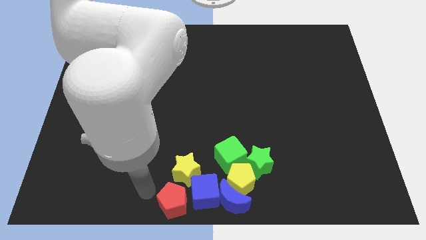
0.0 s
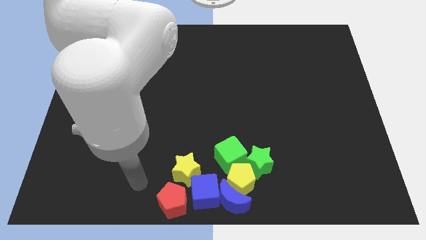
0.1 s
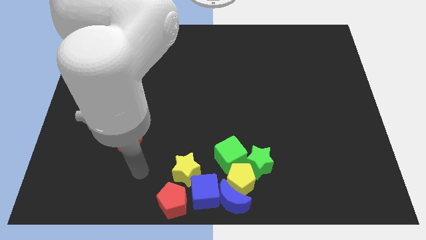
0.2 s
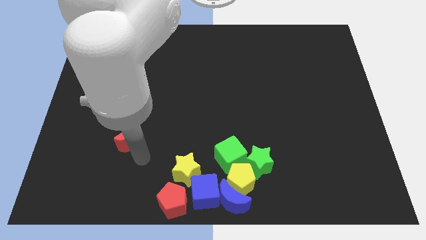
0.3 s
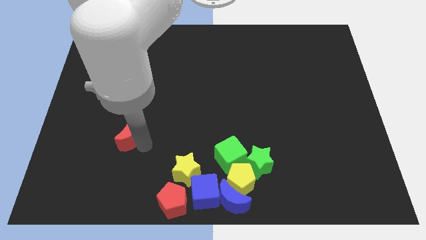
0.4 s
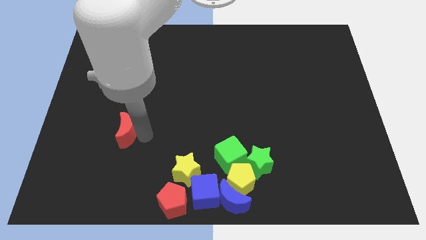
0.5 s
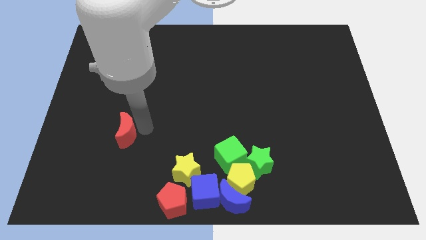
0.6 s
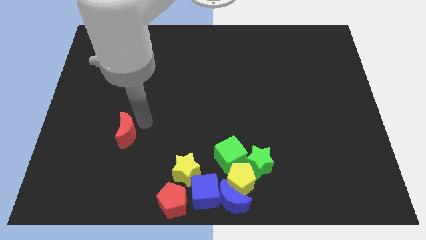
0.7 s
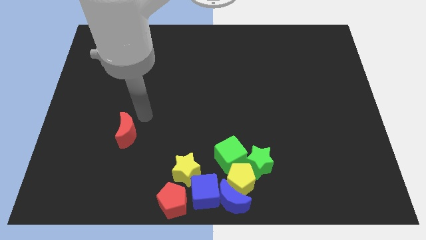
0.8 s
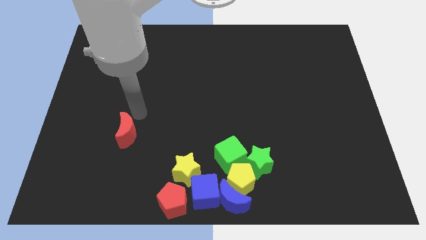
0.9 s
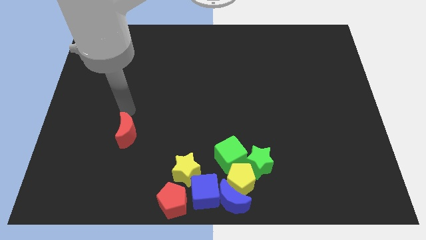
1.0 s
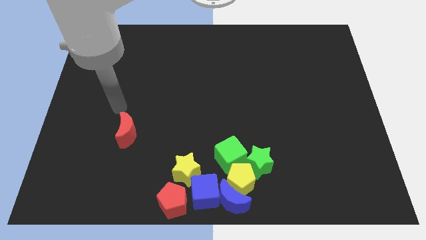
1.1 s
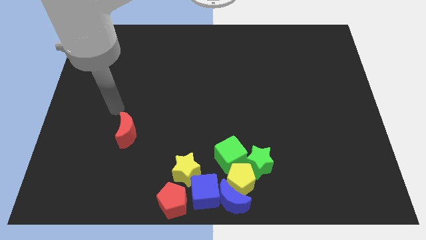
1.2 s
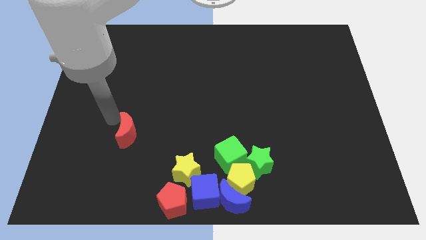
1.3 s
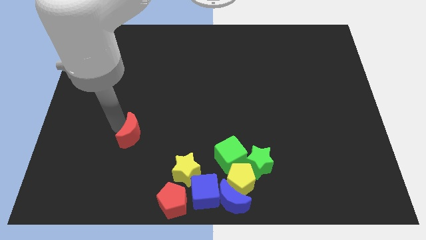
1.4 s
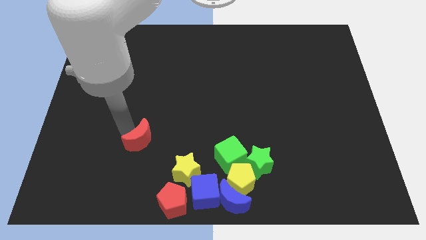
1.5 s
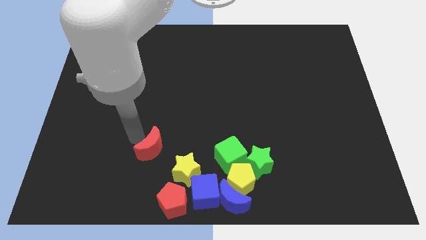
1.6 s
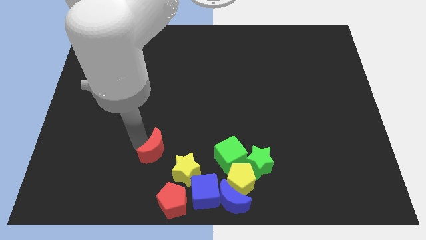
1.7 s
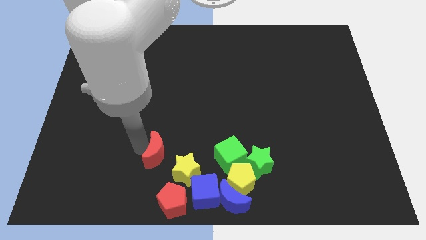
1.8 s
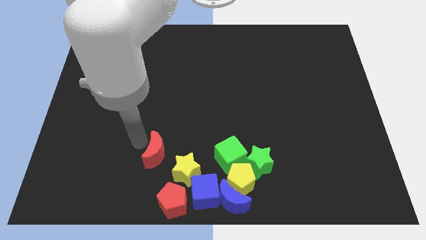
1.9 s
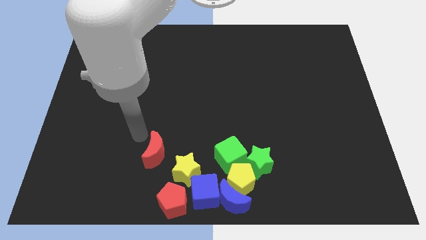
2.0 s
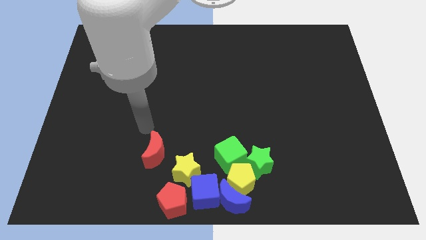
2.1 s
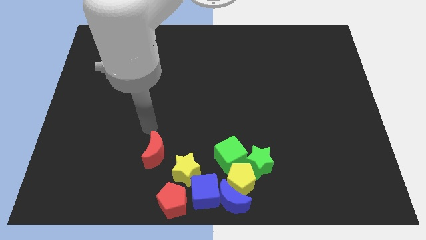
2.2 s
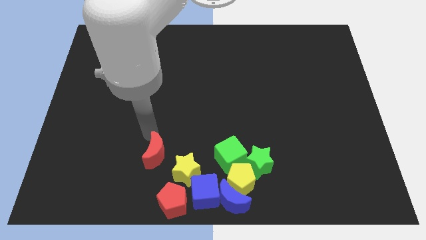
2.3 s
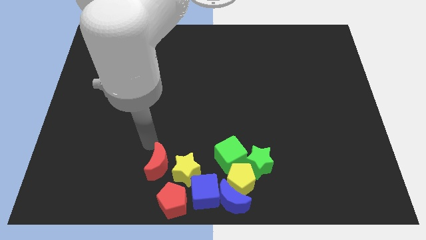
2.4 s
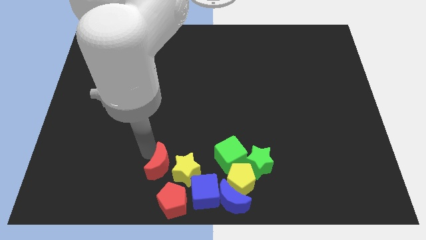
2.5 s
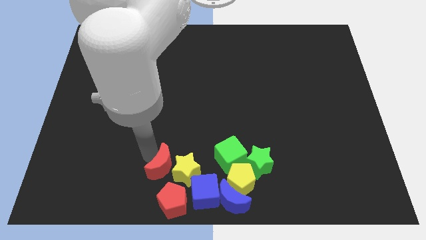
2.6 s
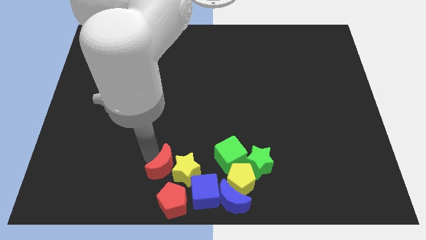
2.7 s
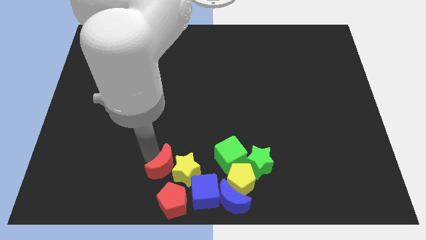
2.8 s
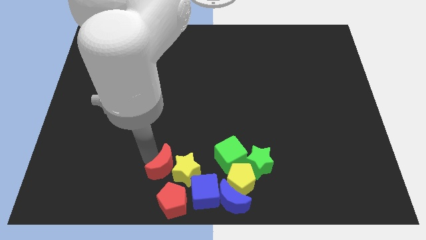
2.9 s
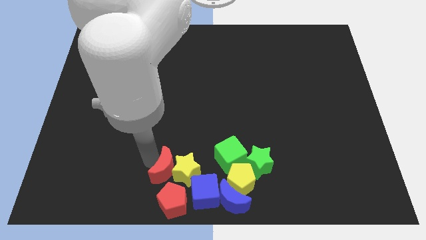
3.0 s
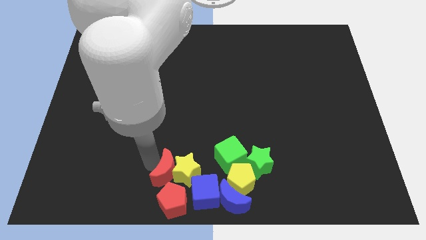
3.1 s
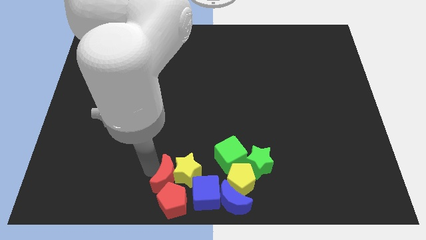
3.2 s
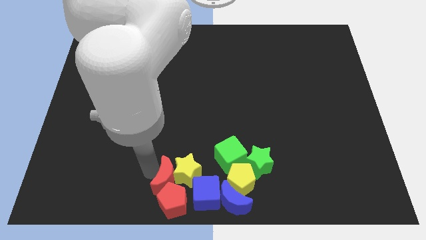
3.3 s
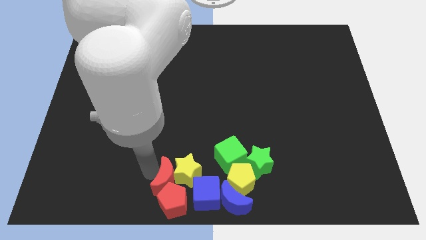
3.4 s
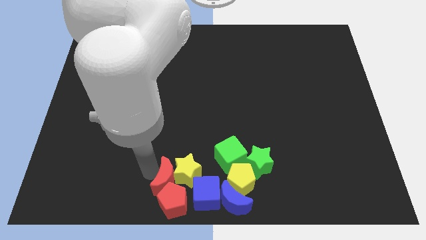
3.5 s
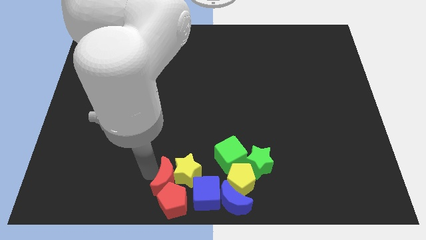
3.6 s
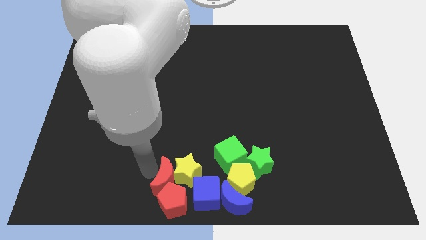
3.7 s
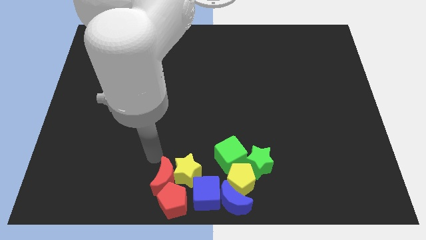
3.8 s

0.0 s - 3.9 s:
move red moon above red pentagon

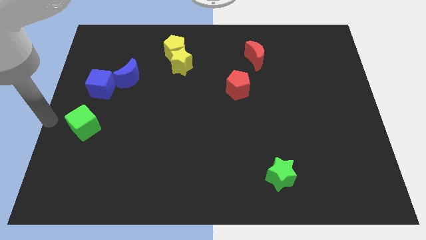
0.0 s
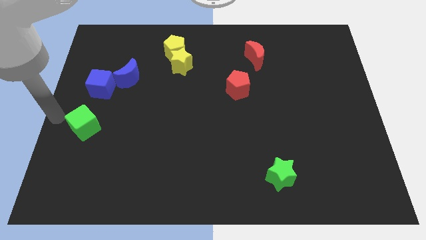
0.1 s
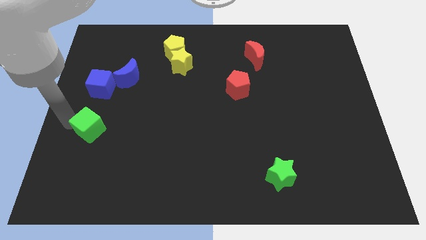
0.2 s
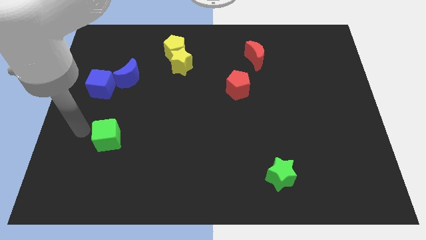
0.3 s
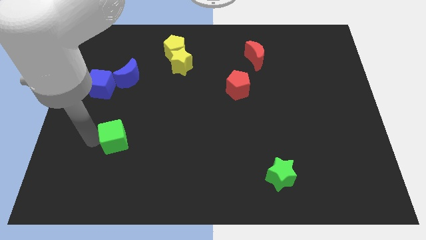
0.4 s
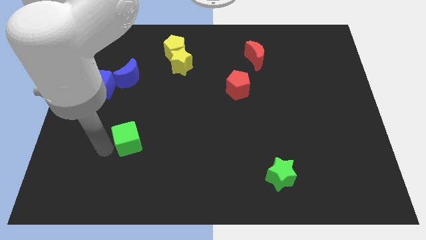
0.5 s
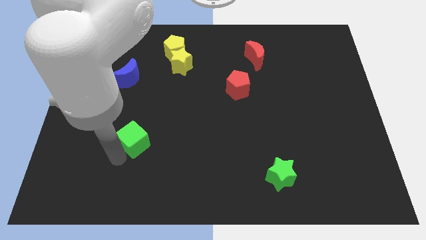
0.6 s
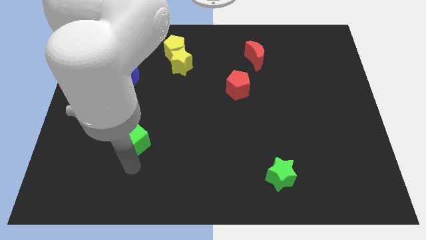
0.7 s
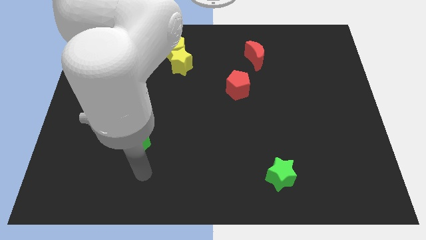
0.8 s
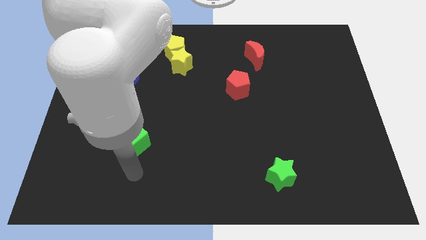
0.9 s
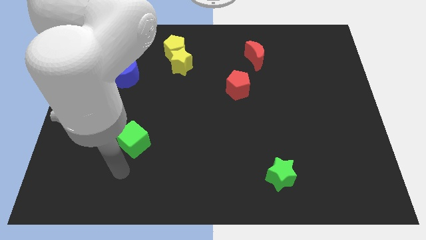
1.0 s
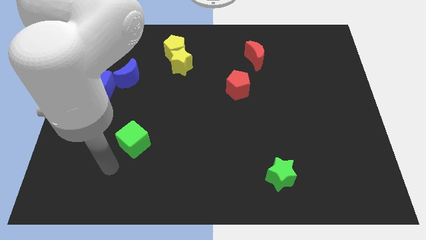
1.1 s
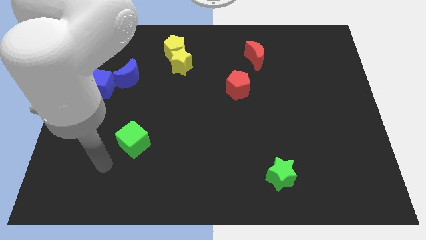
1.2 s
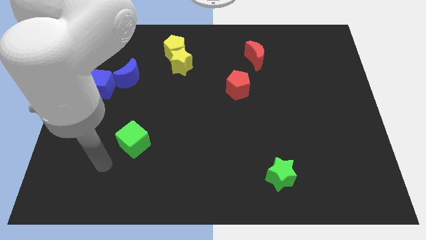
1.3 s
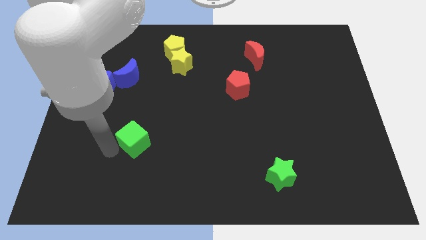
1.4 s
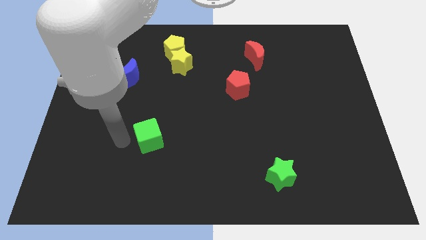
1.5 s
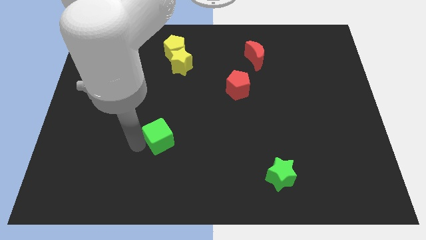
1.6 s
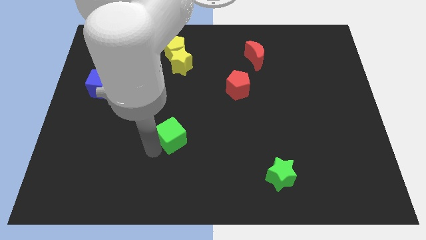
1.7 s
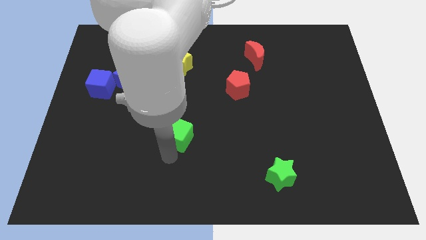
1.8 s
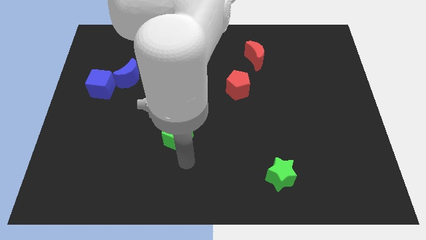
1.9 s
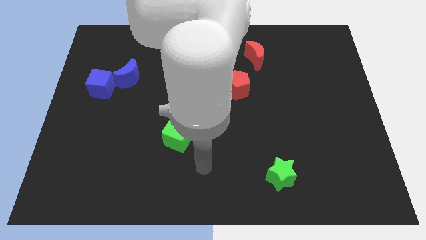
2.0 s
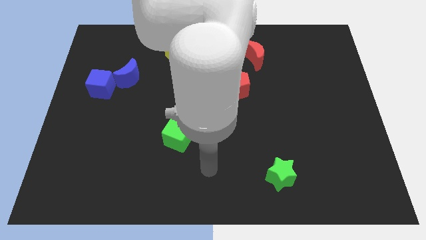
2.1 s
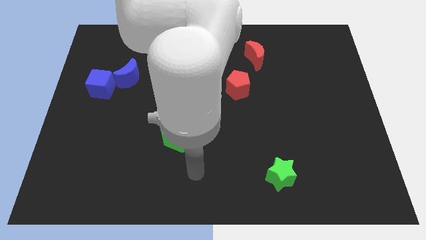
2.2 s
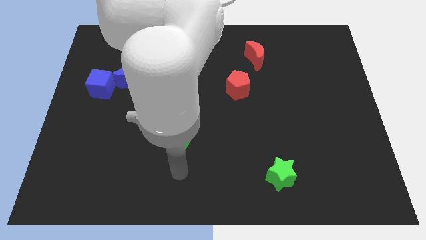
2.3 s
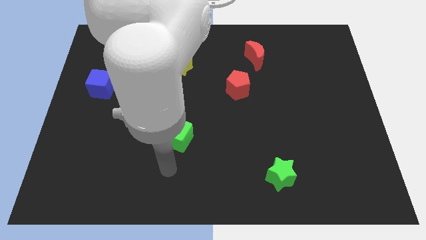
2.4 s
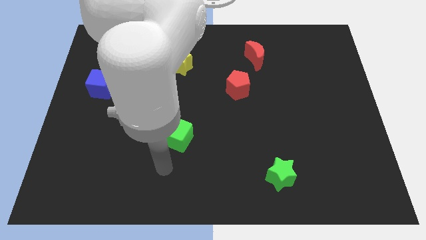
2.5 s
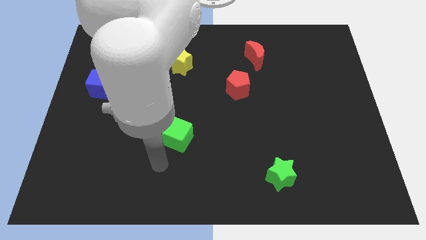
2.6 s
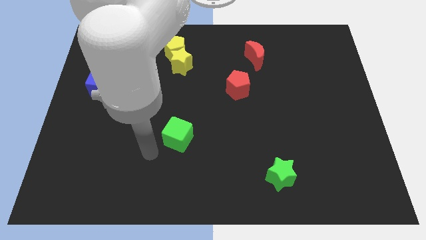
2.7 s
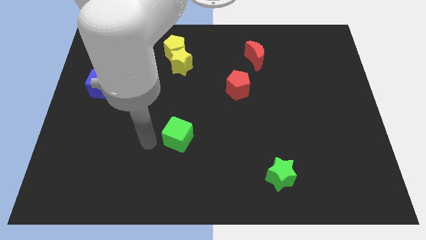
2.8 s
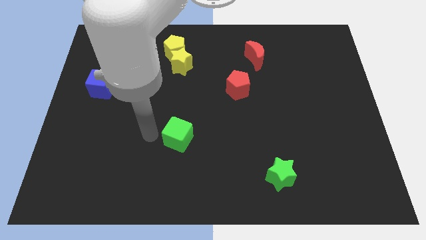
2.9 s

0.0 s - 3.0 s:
push the green cube below the group of yellow blocks

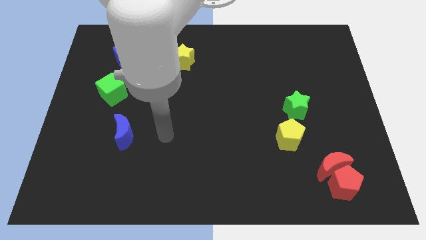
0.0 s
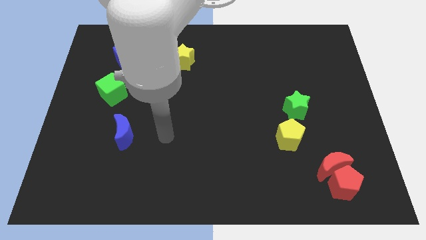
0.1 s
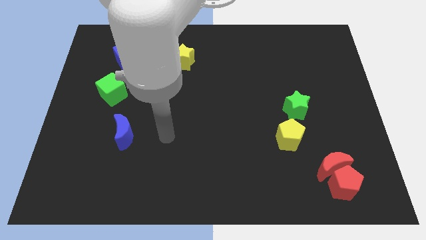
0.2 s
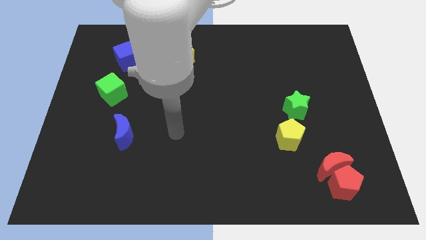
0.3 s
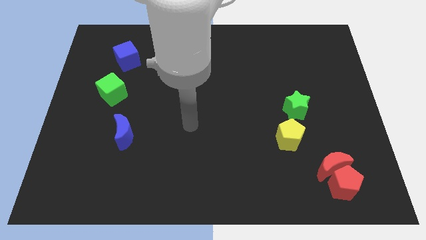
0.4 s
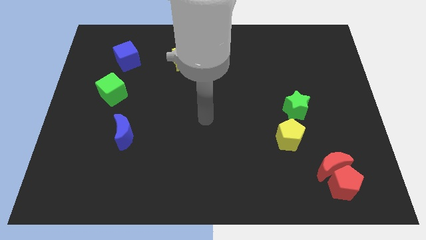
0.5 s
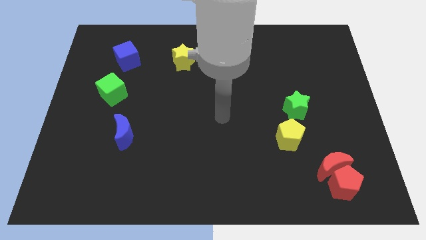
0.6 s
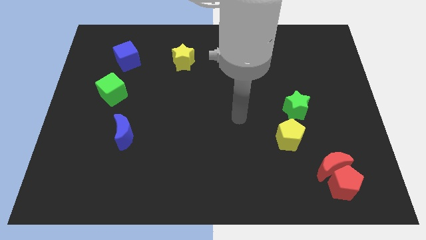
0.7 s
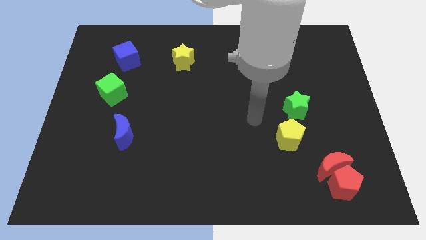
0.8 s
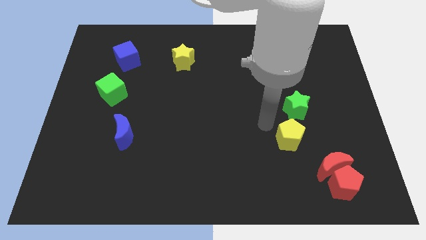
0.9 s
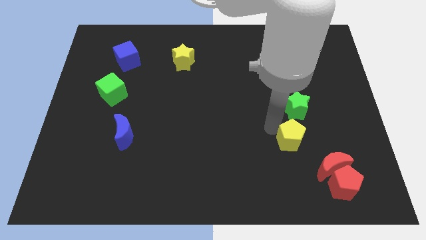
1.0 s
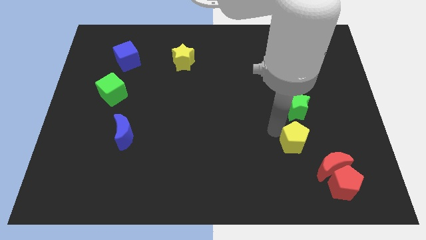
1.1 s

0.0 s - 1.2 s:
move your arm to the left of the yellow pentagon

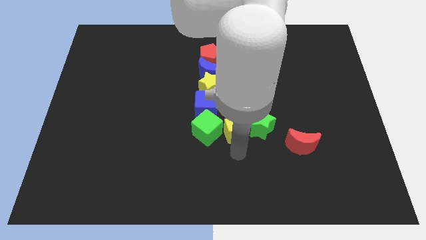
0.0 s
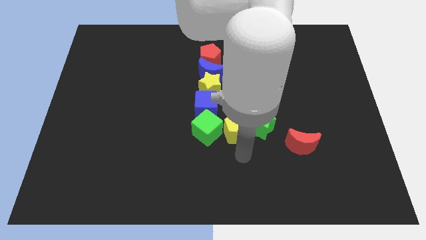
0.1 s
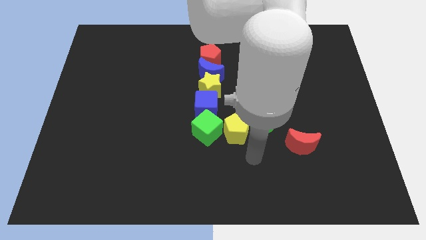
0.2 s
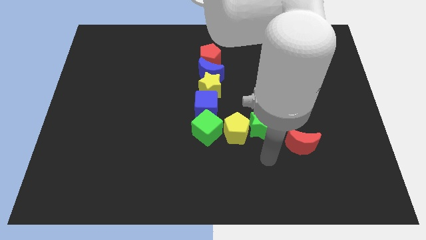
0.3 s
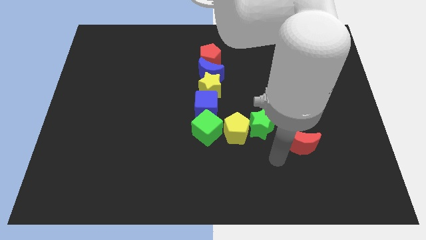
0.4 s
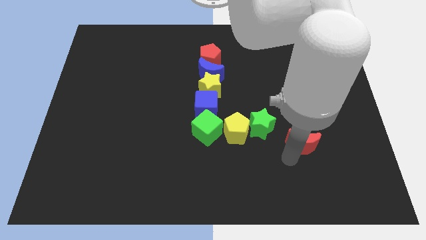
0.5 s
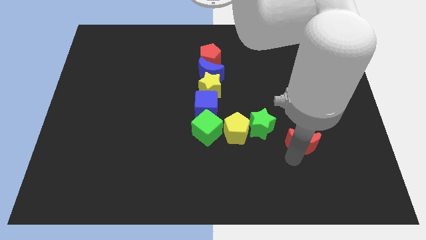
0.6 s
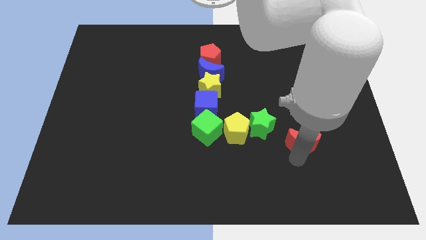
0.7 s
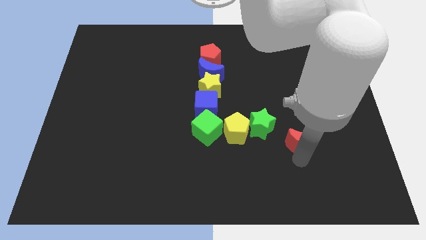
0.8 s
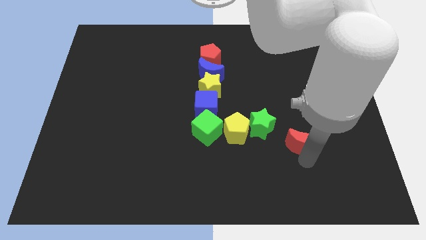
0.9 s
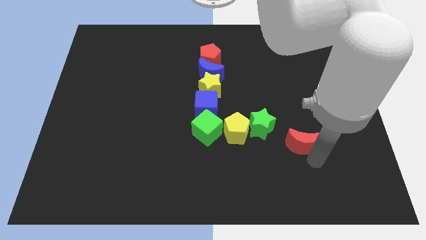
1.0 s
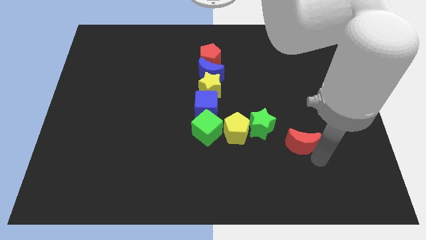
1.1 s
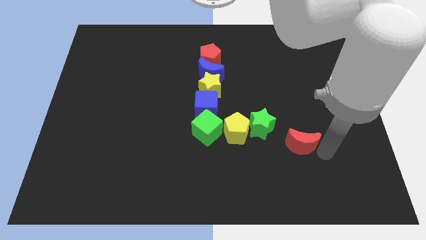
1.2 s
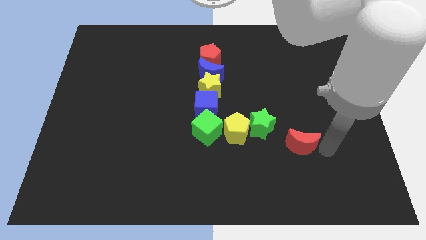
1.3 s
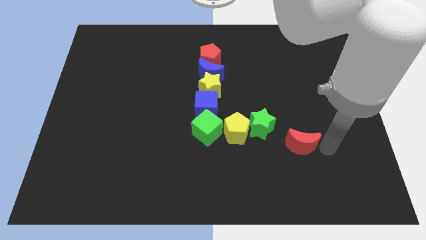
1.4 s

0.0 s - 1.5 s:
go and point your arm at the right side of the red crescent
